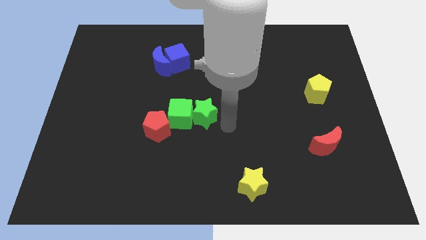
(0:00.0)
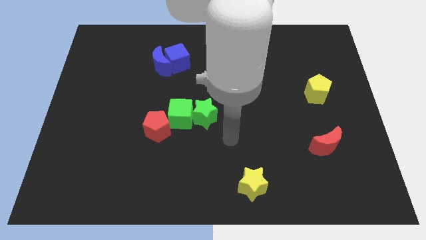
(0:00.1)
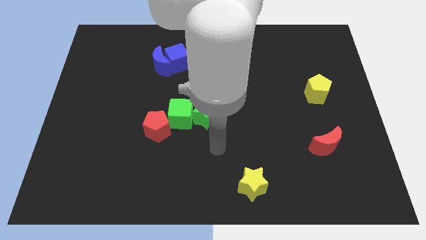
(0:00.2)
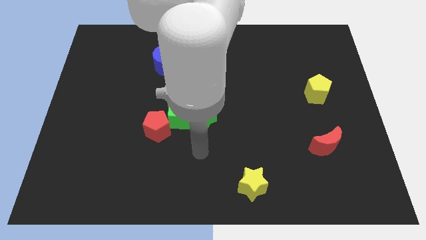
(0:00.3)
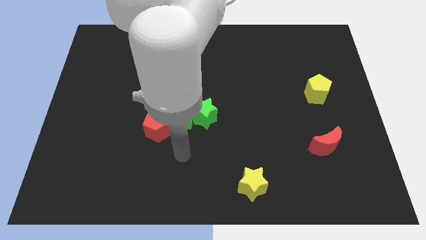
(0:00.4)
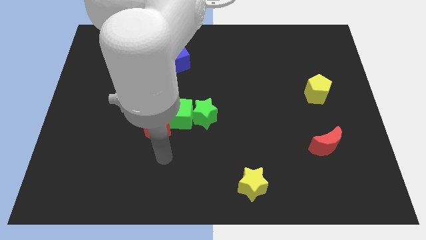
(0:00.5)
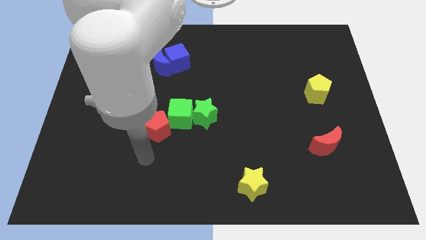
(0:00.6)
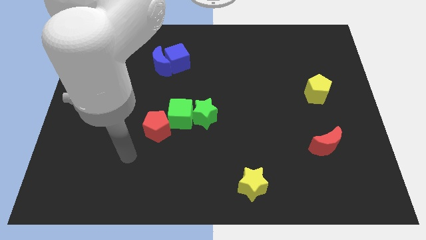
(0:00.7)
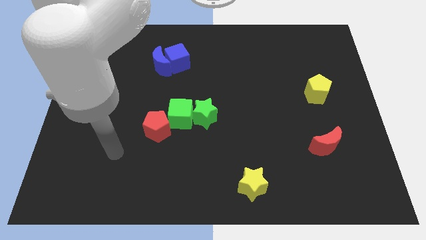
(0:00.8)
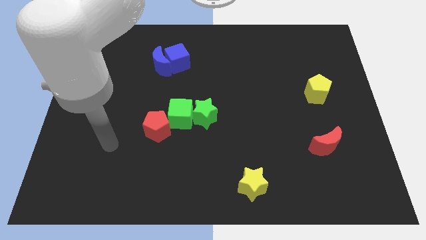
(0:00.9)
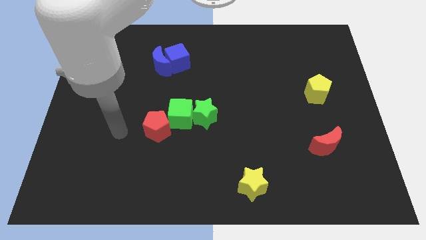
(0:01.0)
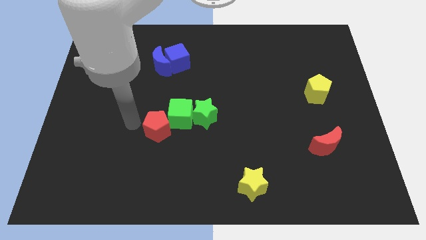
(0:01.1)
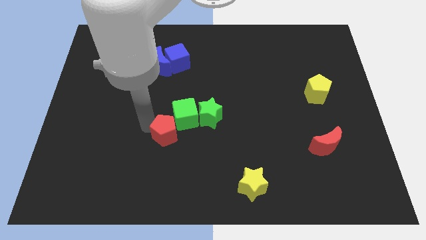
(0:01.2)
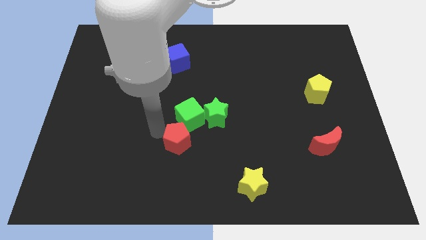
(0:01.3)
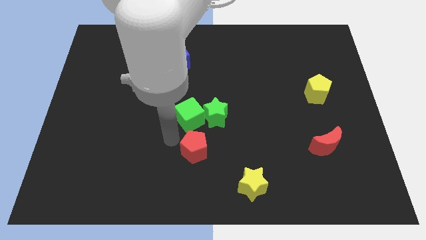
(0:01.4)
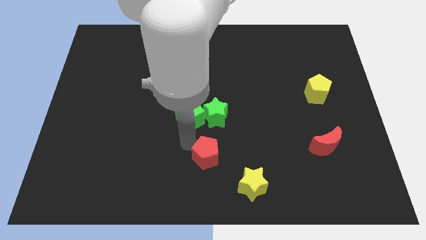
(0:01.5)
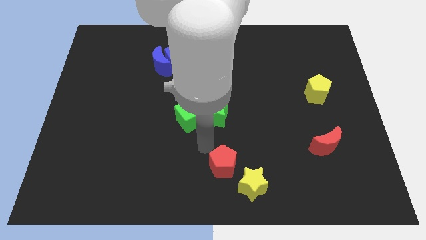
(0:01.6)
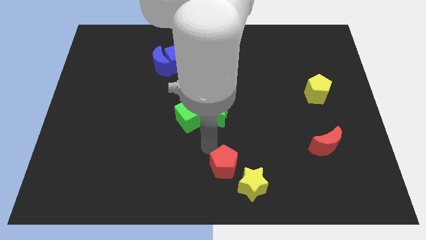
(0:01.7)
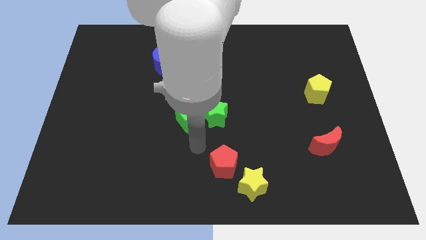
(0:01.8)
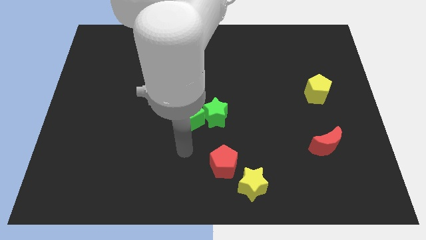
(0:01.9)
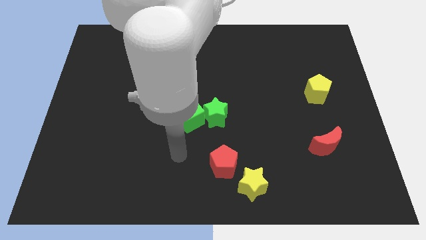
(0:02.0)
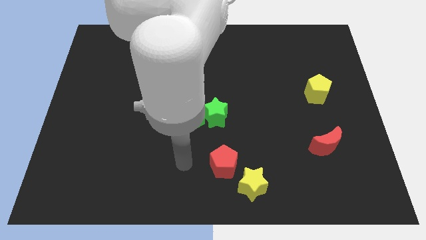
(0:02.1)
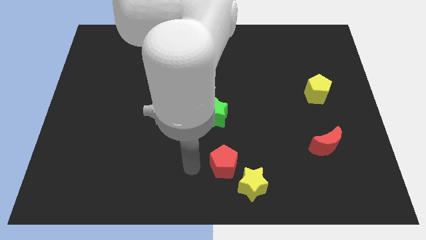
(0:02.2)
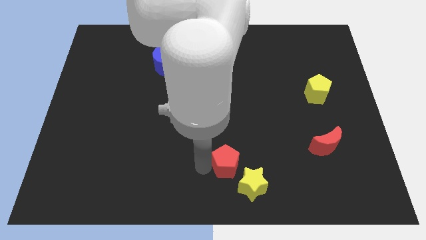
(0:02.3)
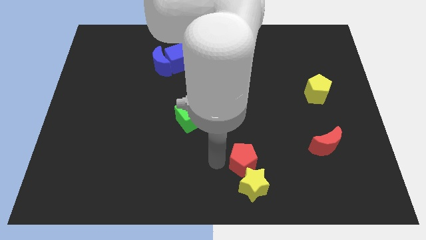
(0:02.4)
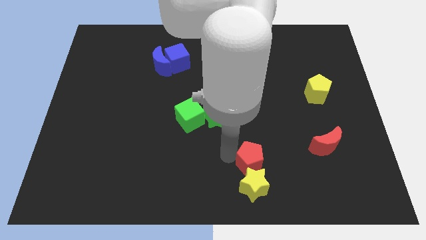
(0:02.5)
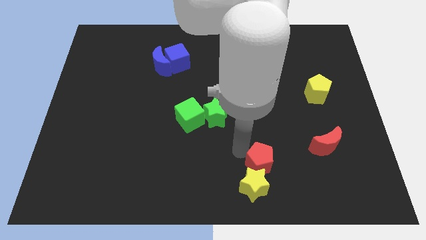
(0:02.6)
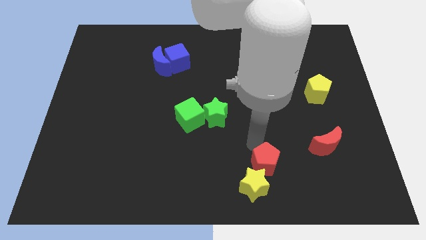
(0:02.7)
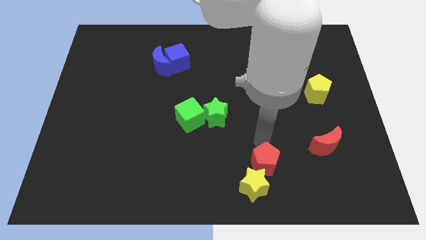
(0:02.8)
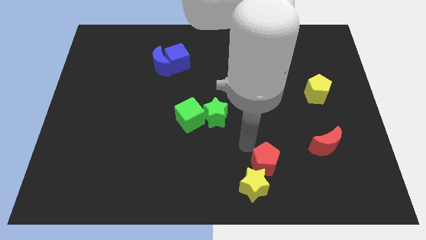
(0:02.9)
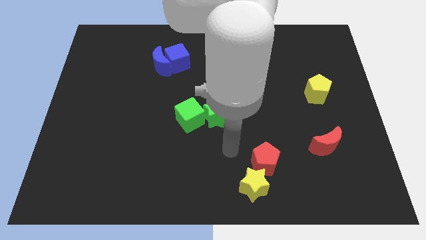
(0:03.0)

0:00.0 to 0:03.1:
separate the red pentagon from green blocks

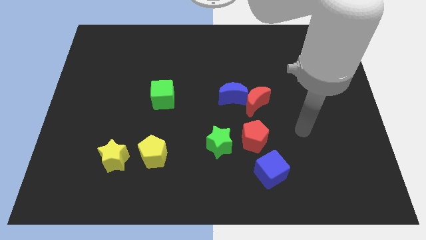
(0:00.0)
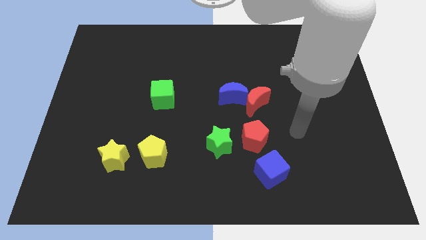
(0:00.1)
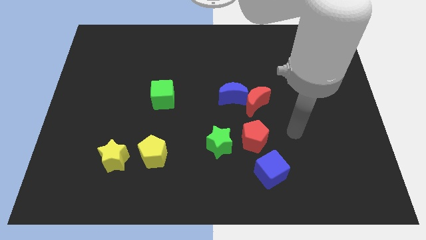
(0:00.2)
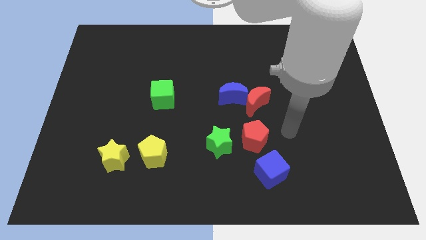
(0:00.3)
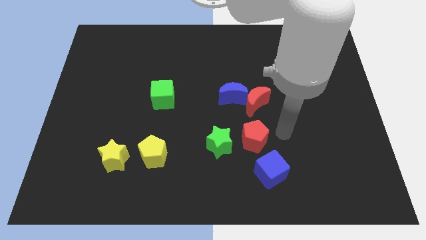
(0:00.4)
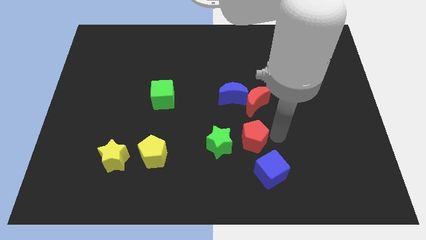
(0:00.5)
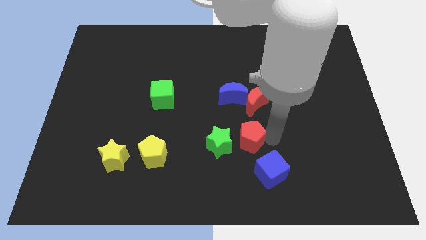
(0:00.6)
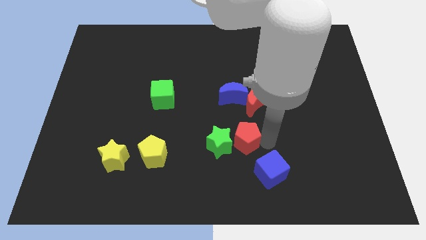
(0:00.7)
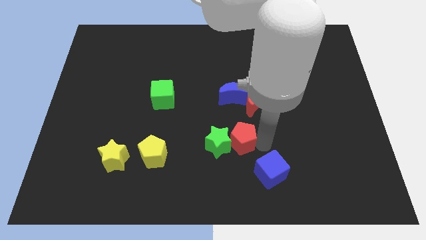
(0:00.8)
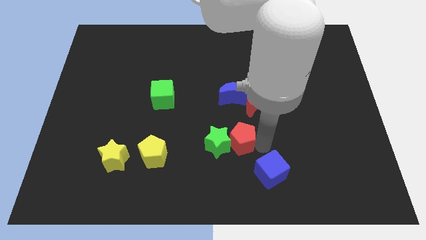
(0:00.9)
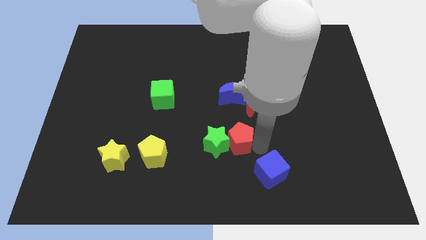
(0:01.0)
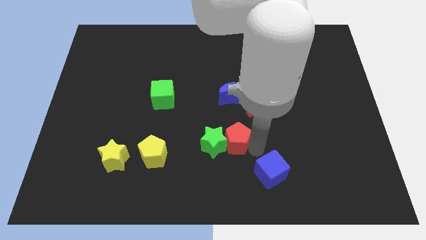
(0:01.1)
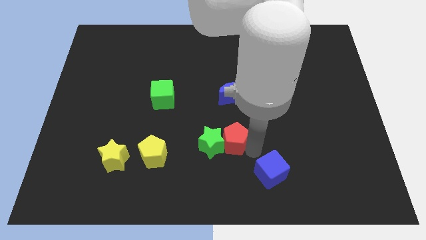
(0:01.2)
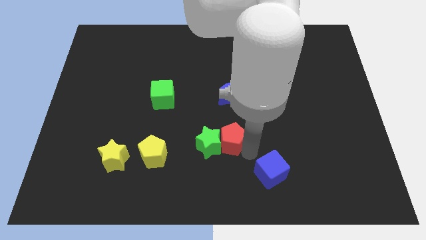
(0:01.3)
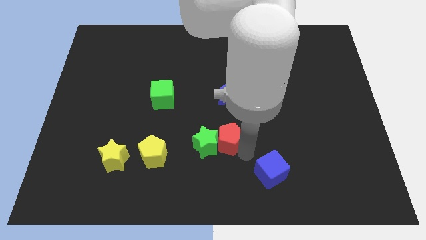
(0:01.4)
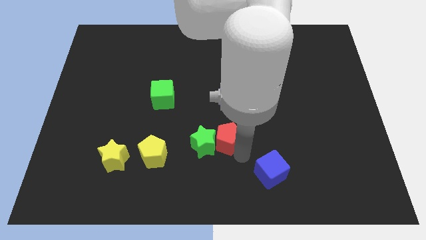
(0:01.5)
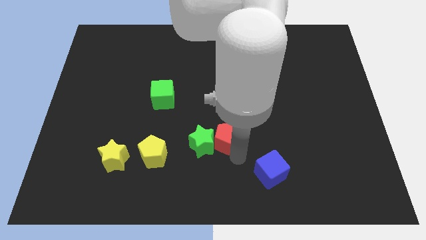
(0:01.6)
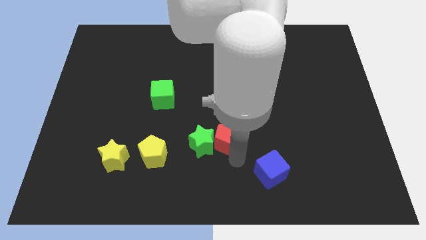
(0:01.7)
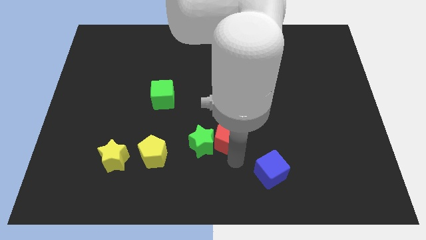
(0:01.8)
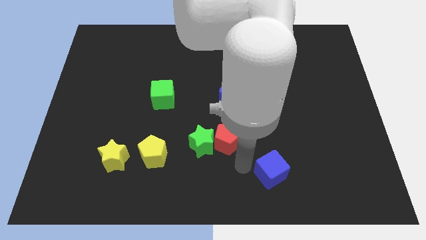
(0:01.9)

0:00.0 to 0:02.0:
push the red pentagon along with the green star slightly to the left

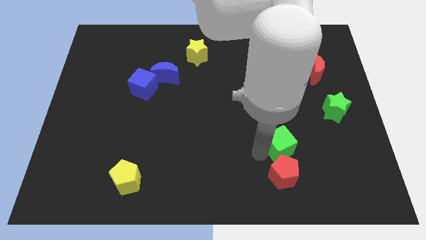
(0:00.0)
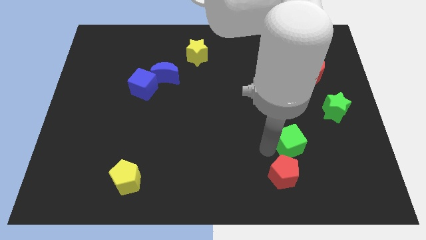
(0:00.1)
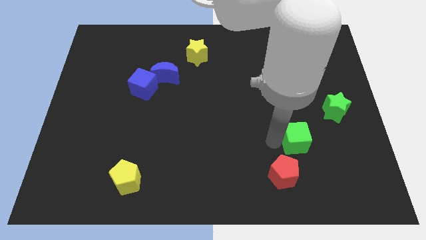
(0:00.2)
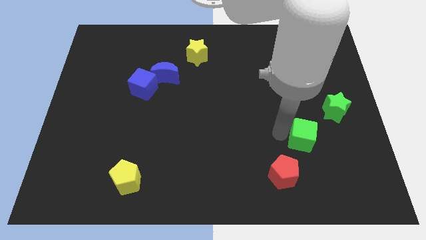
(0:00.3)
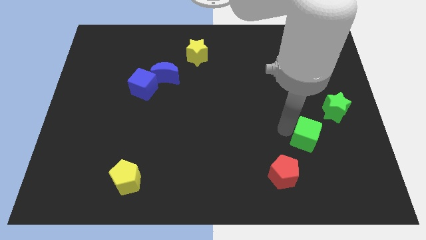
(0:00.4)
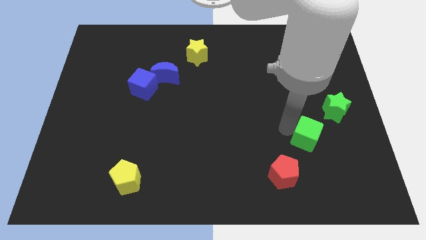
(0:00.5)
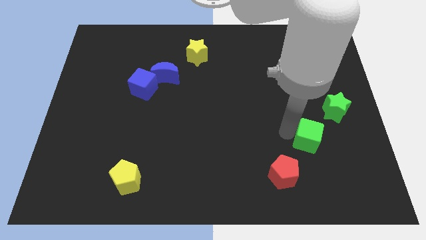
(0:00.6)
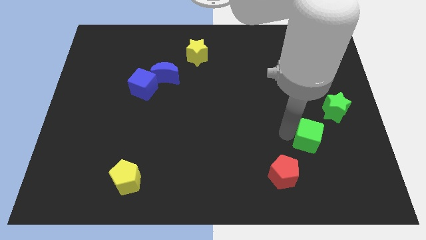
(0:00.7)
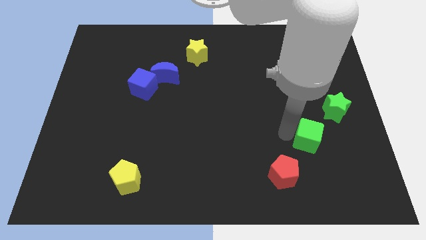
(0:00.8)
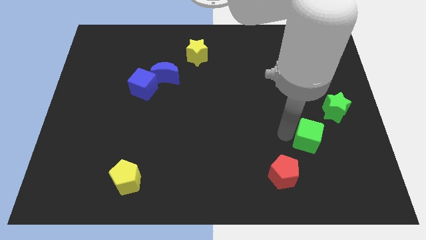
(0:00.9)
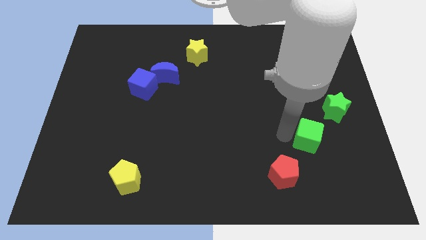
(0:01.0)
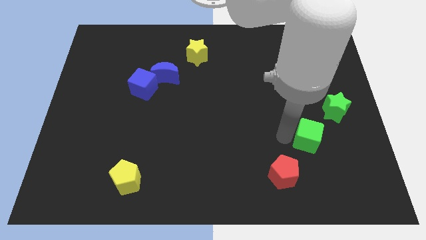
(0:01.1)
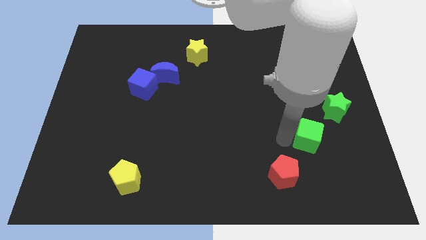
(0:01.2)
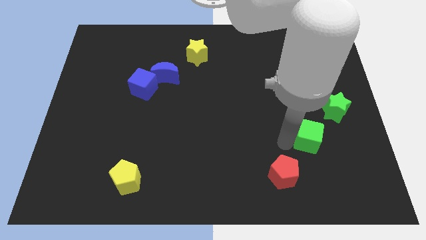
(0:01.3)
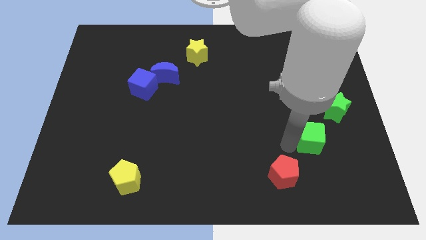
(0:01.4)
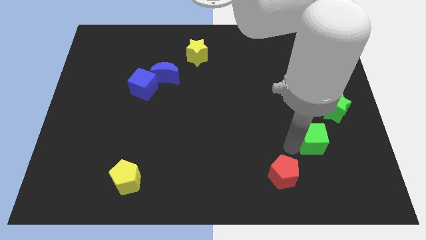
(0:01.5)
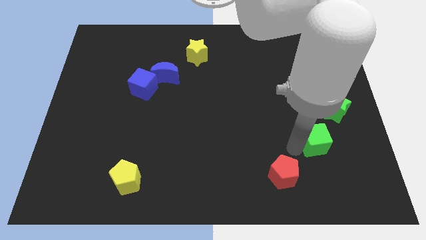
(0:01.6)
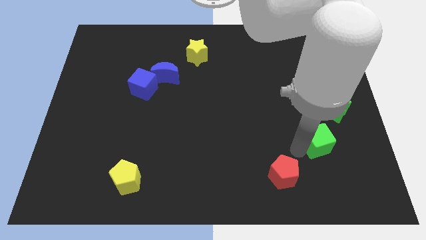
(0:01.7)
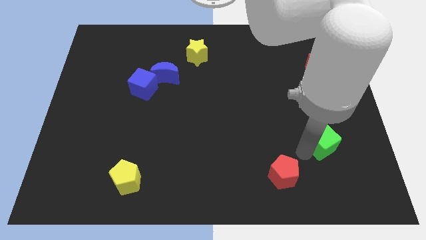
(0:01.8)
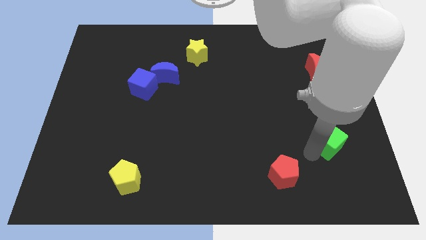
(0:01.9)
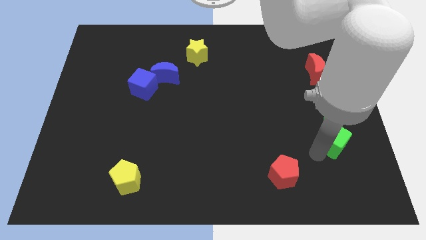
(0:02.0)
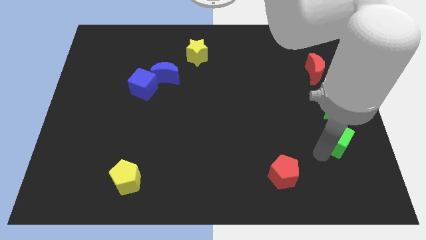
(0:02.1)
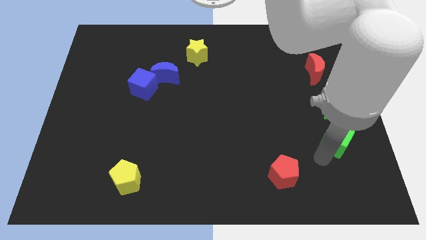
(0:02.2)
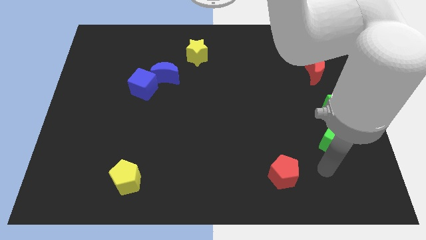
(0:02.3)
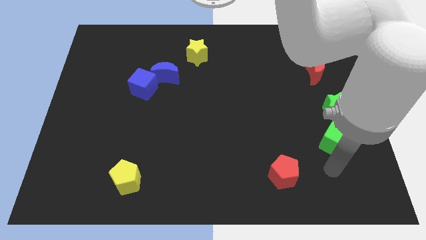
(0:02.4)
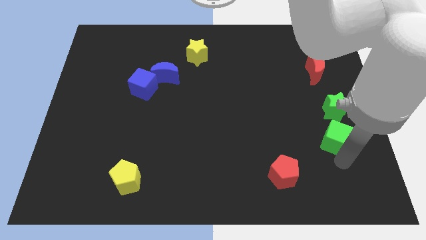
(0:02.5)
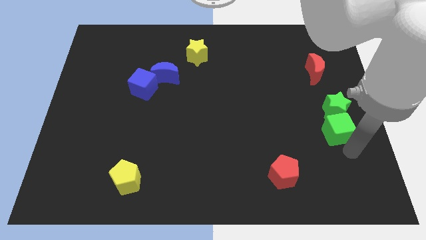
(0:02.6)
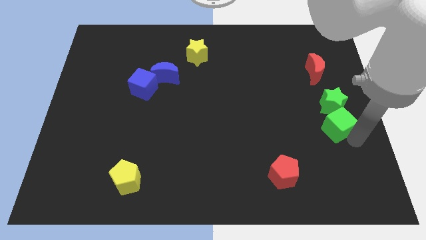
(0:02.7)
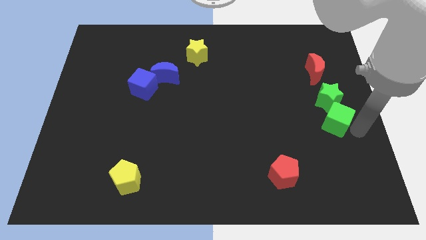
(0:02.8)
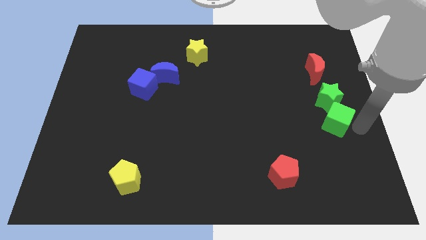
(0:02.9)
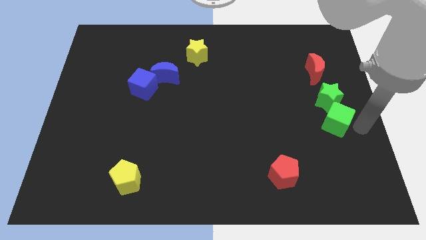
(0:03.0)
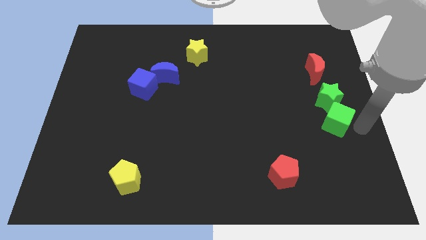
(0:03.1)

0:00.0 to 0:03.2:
move the green cube to the bottom of the green star

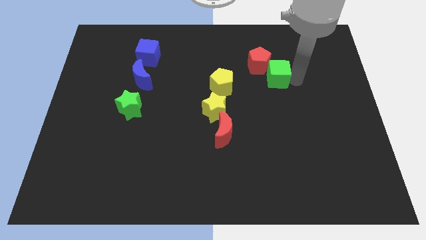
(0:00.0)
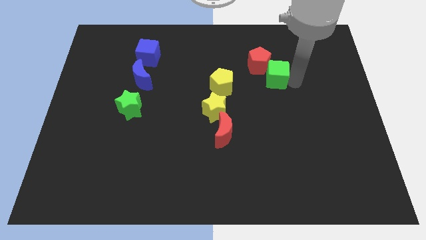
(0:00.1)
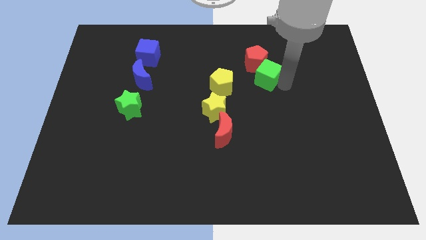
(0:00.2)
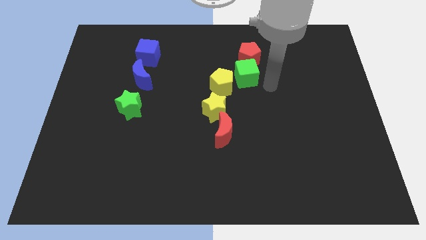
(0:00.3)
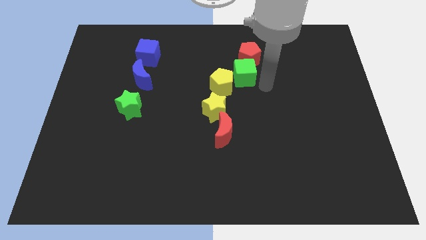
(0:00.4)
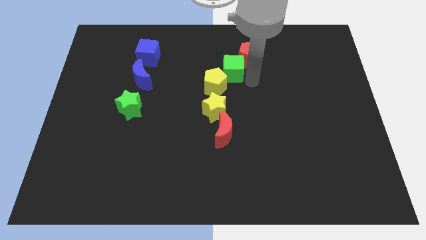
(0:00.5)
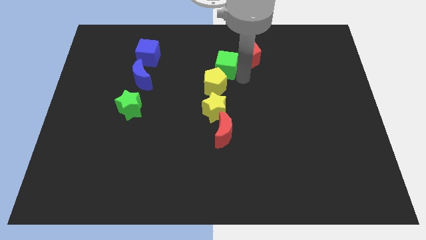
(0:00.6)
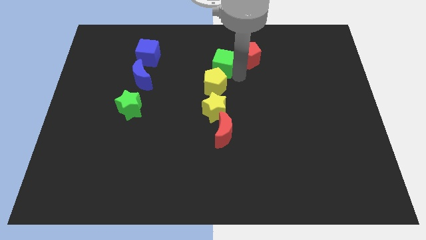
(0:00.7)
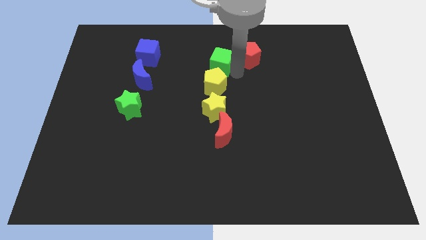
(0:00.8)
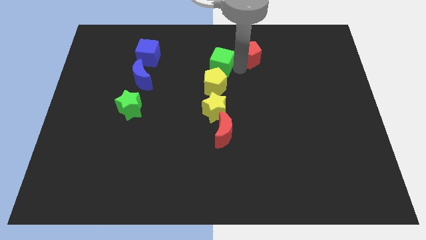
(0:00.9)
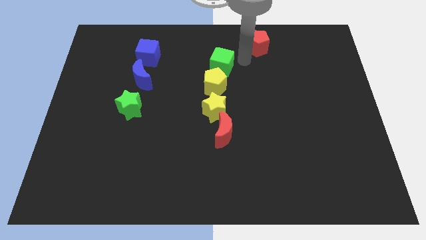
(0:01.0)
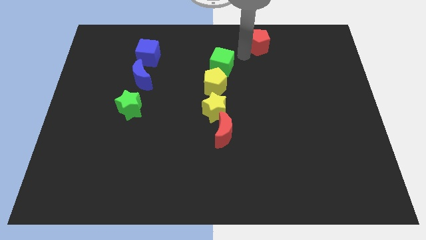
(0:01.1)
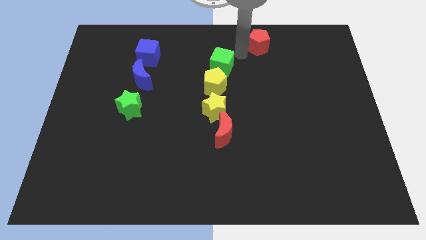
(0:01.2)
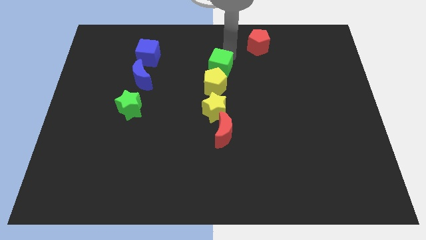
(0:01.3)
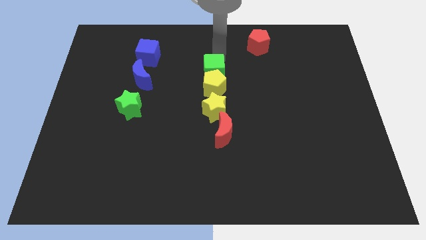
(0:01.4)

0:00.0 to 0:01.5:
place green cube above yellow pentagon
